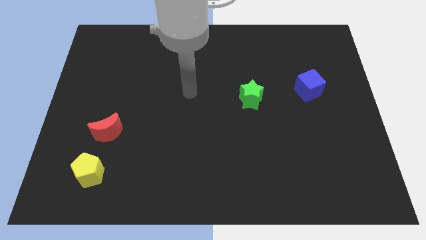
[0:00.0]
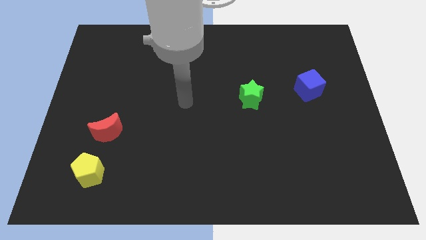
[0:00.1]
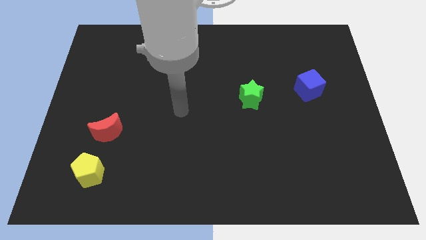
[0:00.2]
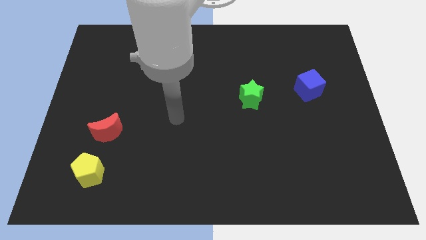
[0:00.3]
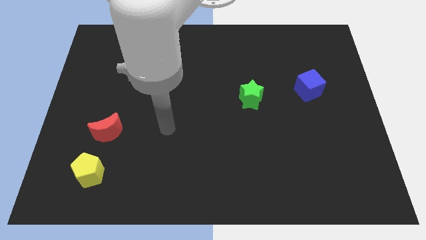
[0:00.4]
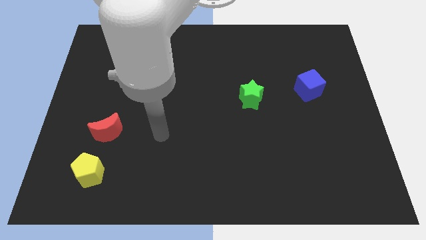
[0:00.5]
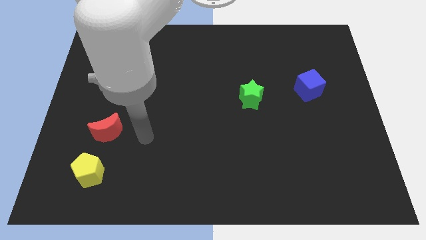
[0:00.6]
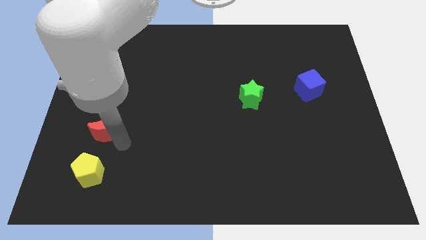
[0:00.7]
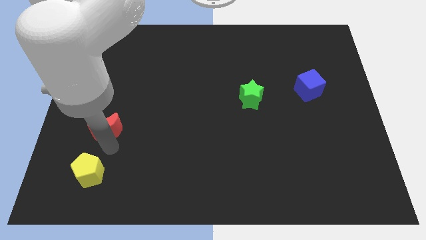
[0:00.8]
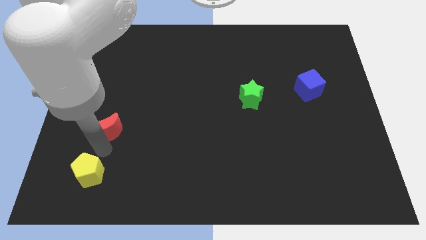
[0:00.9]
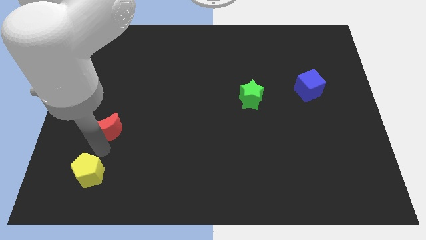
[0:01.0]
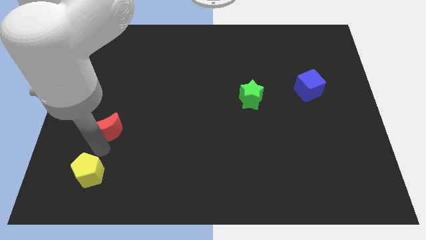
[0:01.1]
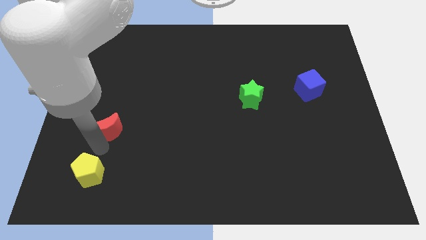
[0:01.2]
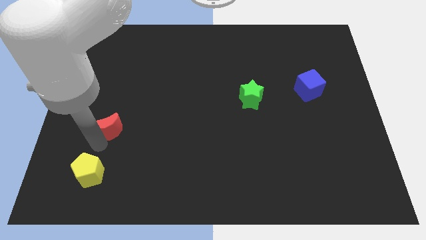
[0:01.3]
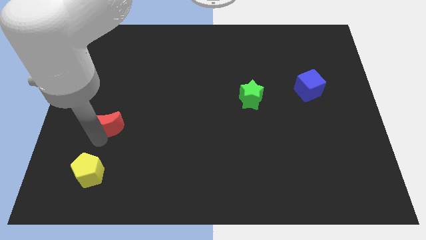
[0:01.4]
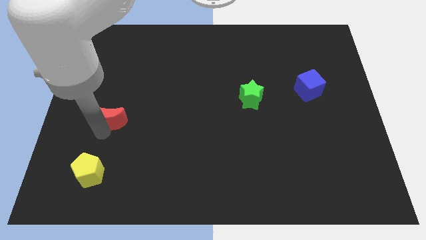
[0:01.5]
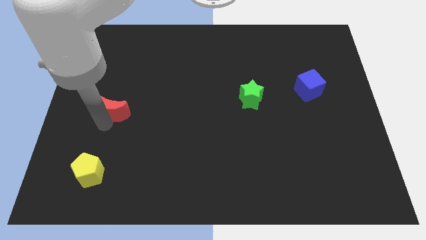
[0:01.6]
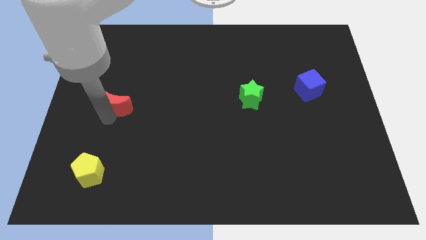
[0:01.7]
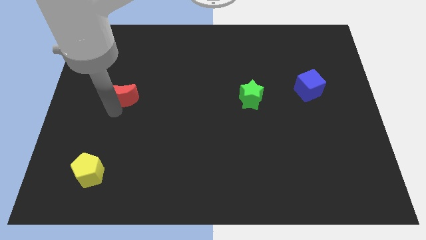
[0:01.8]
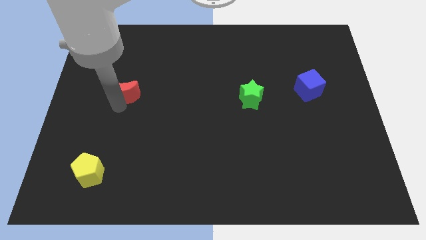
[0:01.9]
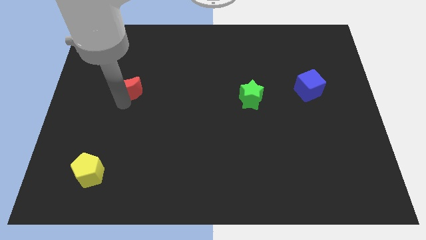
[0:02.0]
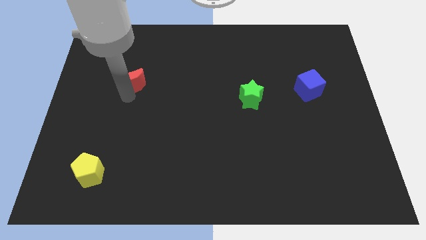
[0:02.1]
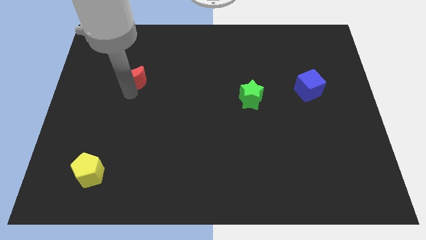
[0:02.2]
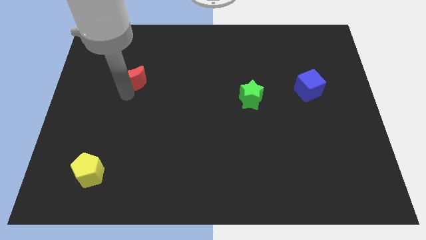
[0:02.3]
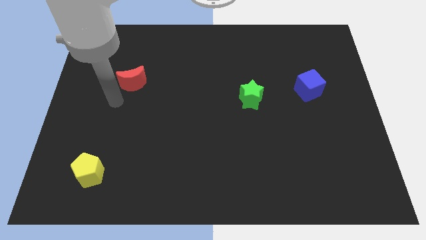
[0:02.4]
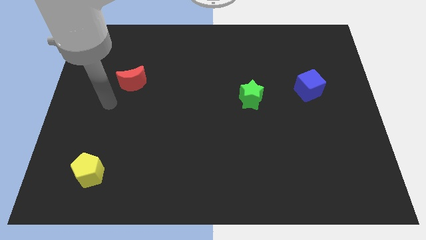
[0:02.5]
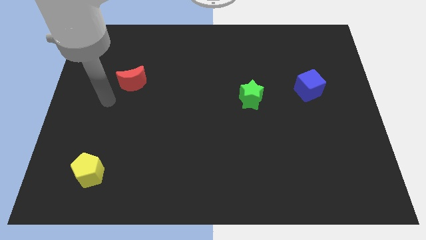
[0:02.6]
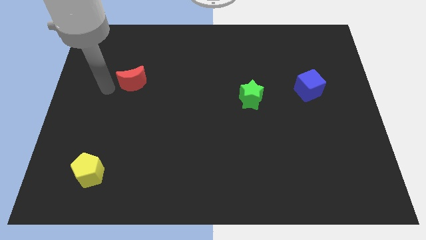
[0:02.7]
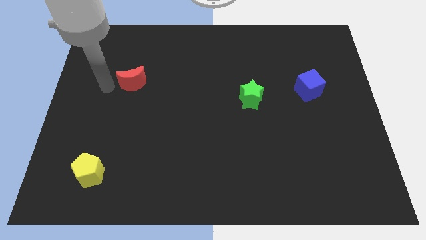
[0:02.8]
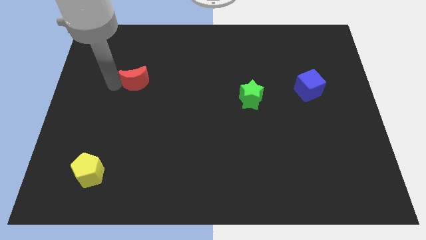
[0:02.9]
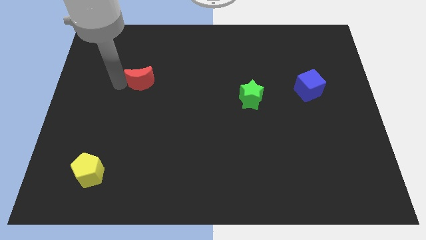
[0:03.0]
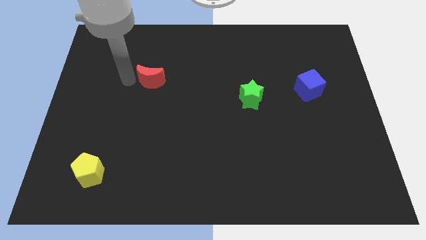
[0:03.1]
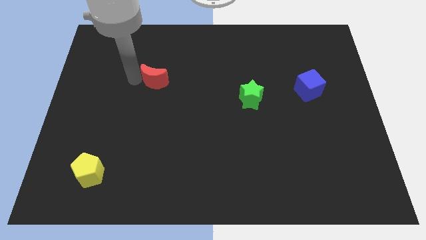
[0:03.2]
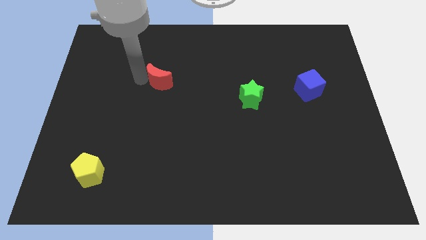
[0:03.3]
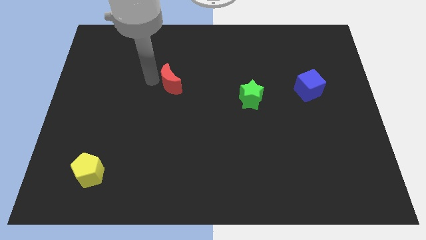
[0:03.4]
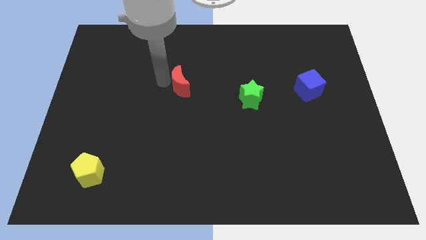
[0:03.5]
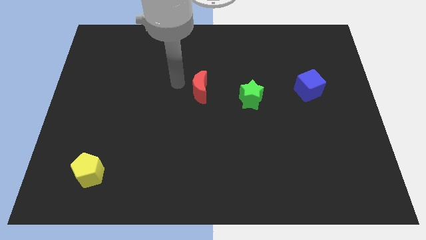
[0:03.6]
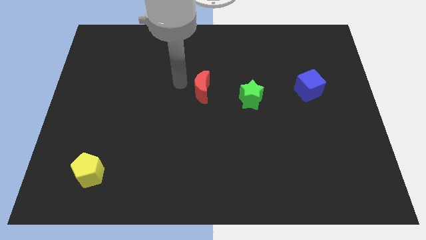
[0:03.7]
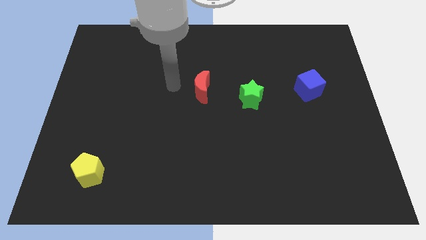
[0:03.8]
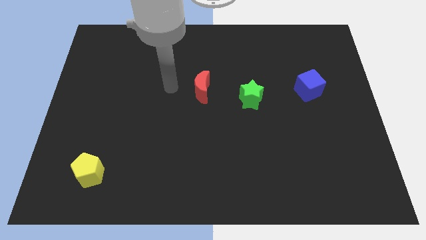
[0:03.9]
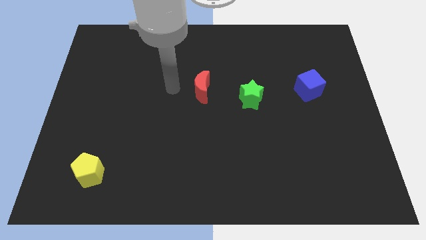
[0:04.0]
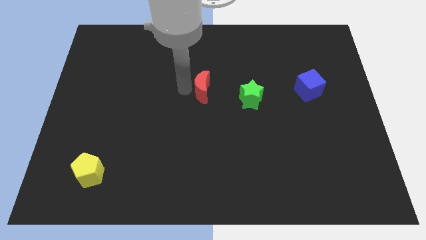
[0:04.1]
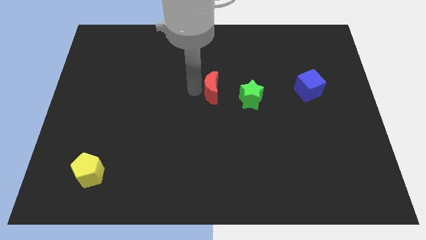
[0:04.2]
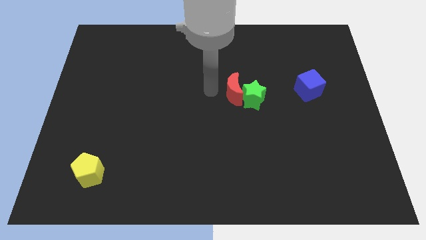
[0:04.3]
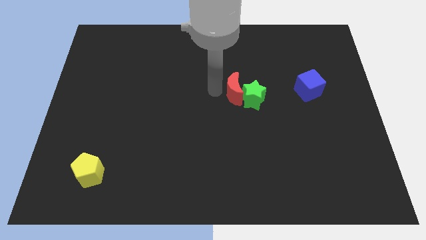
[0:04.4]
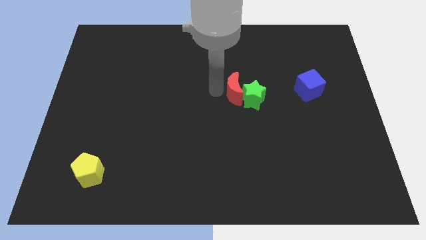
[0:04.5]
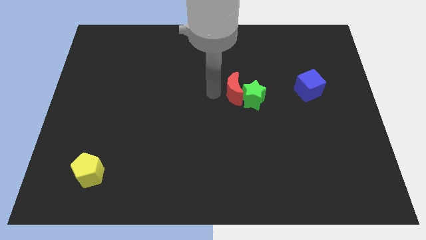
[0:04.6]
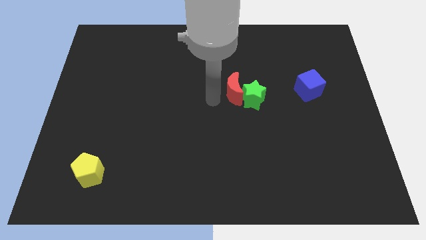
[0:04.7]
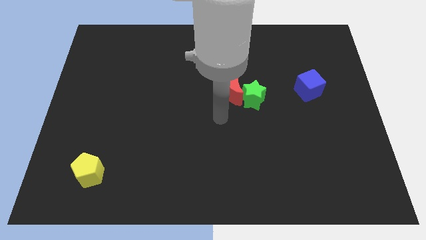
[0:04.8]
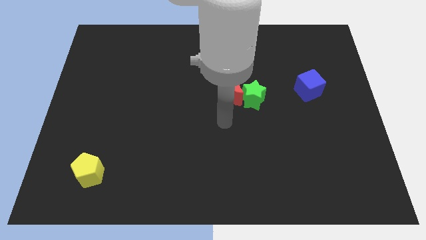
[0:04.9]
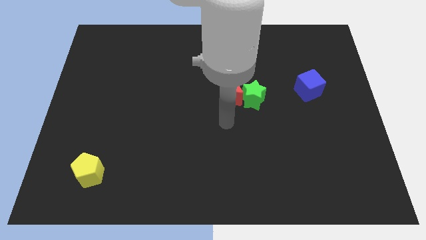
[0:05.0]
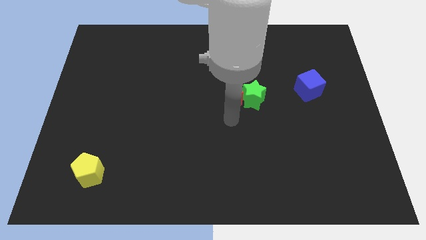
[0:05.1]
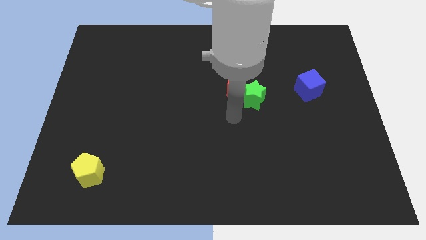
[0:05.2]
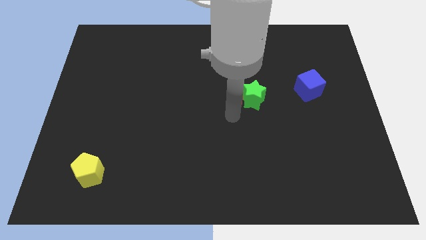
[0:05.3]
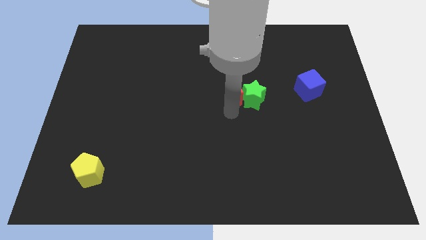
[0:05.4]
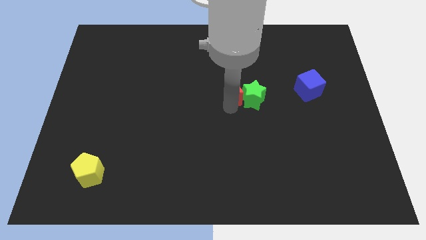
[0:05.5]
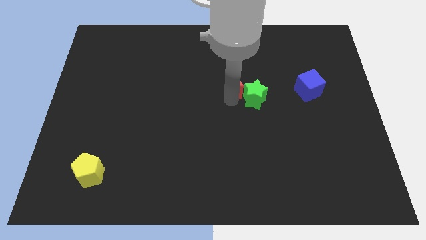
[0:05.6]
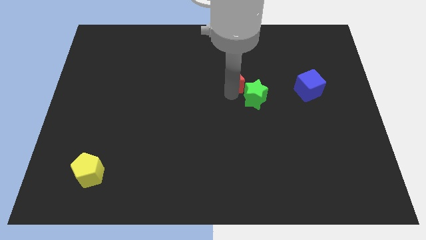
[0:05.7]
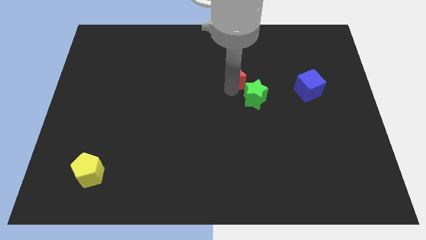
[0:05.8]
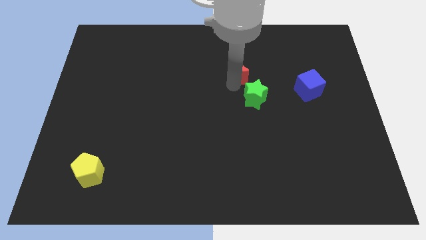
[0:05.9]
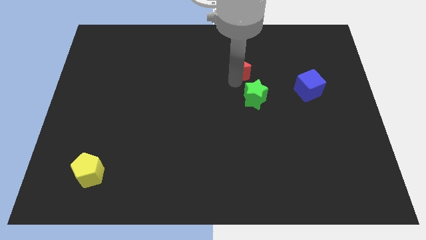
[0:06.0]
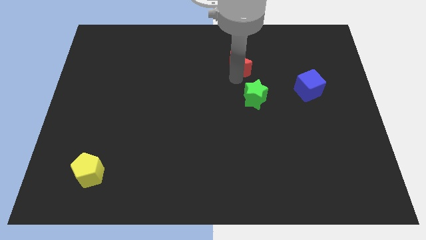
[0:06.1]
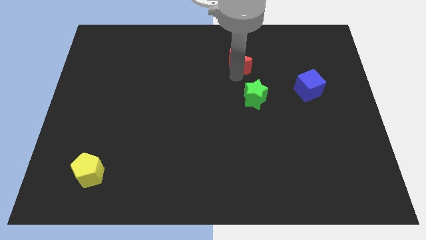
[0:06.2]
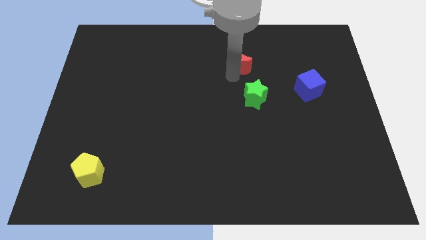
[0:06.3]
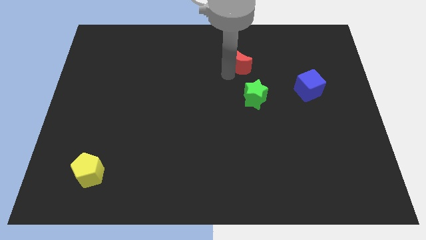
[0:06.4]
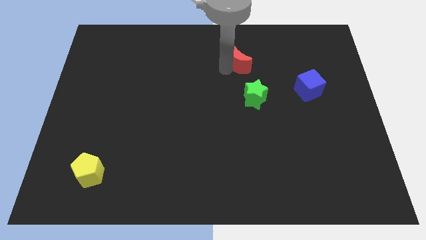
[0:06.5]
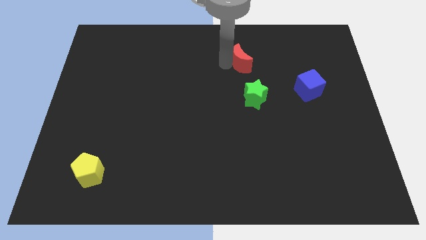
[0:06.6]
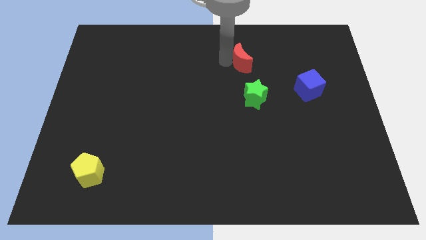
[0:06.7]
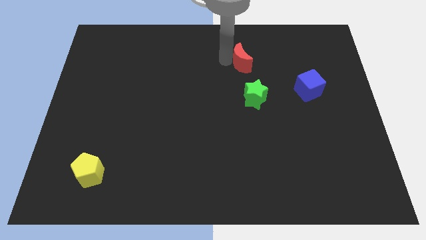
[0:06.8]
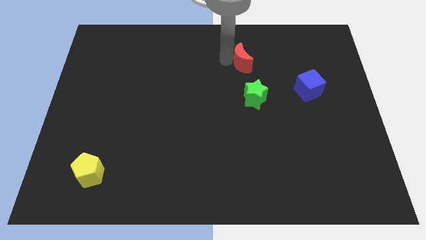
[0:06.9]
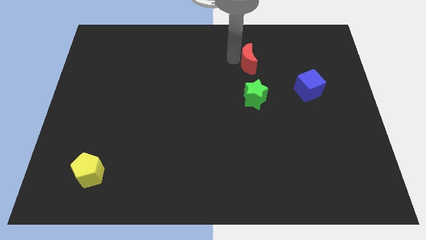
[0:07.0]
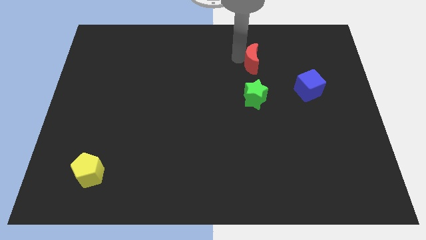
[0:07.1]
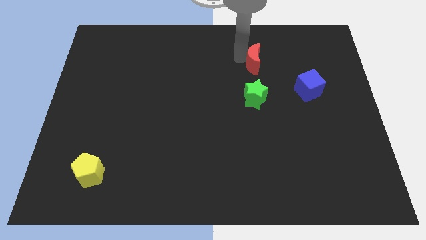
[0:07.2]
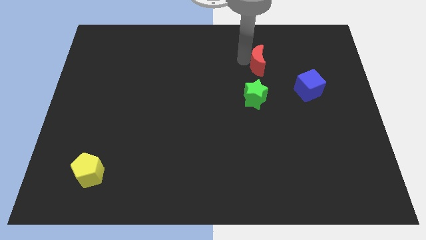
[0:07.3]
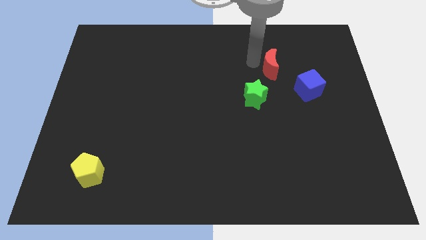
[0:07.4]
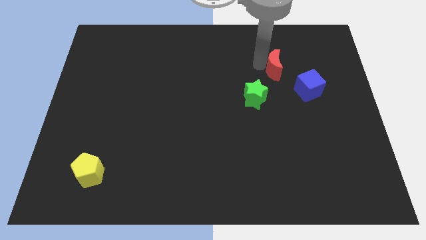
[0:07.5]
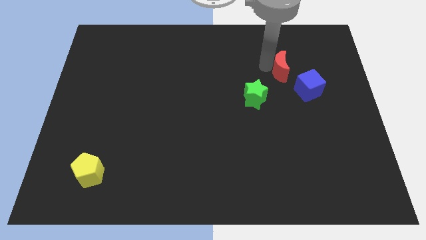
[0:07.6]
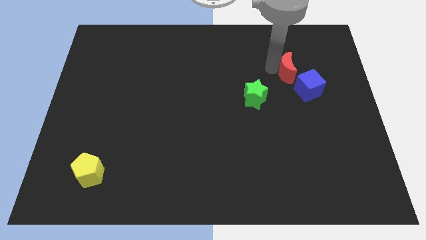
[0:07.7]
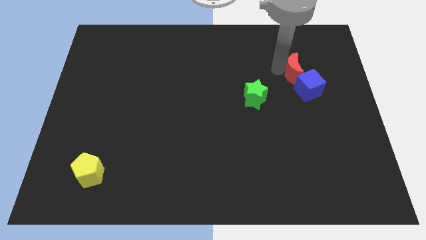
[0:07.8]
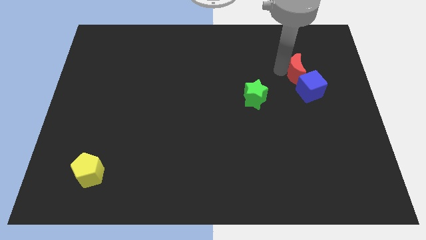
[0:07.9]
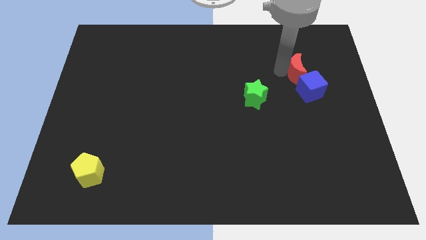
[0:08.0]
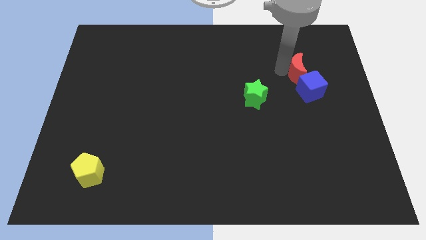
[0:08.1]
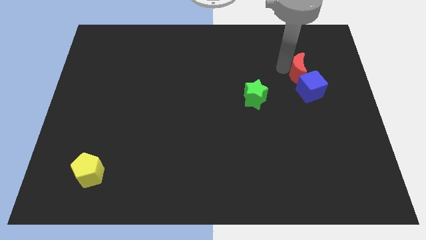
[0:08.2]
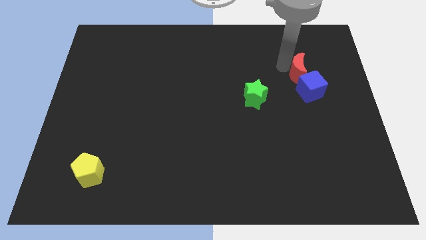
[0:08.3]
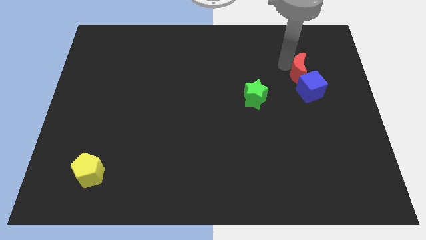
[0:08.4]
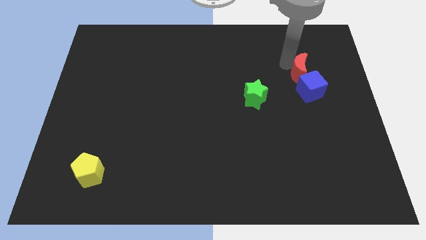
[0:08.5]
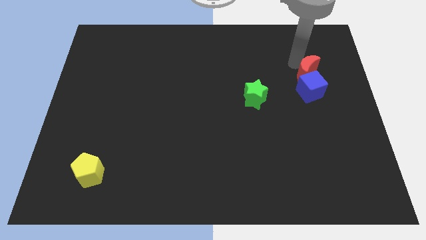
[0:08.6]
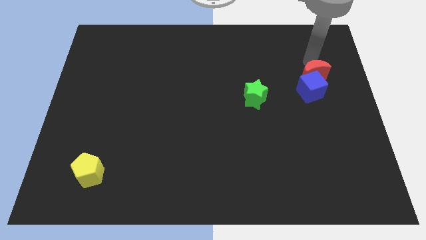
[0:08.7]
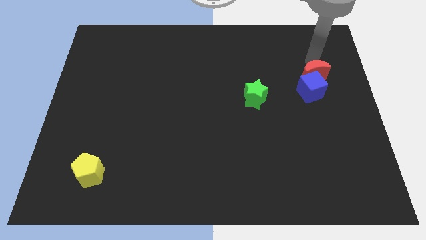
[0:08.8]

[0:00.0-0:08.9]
push the moon next to the blue block
